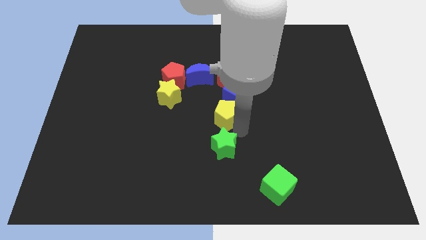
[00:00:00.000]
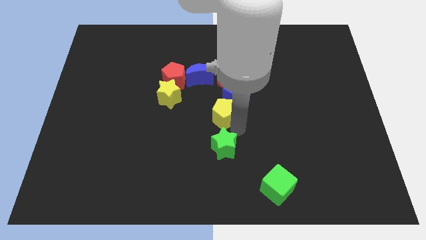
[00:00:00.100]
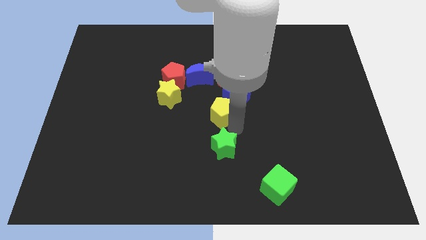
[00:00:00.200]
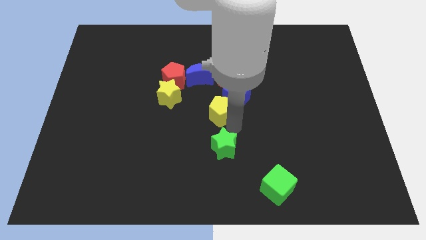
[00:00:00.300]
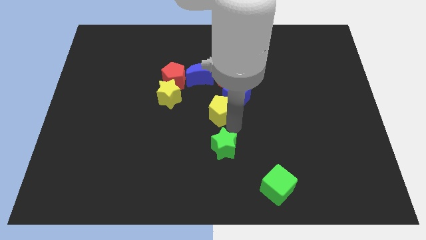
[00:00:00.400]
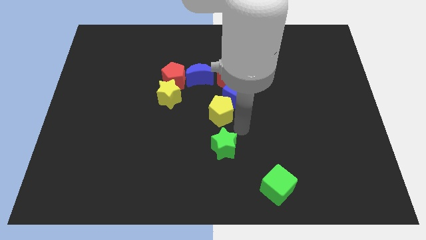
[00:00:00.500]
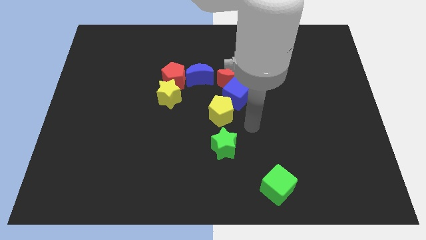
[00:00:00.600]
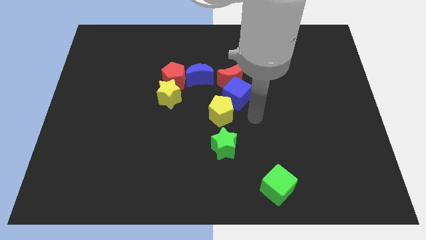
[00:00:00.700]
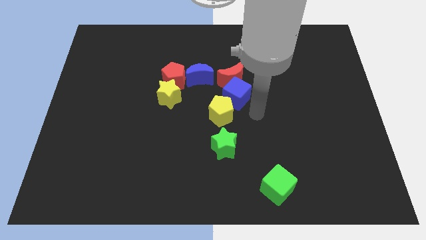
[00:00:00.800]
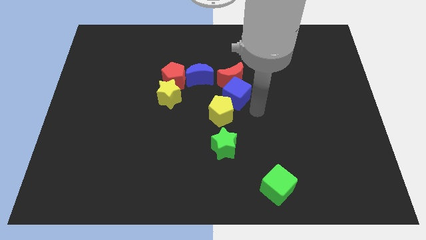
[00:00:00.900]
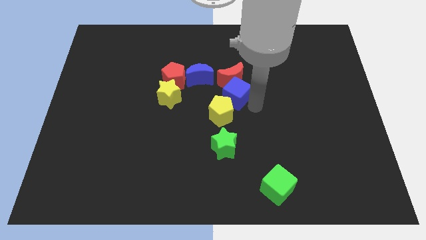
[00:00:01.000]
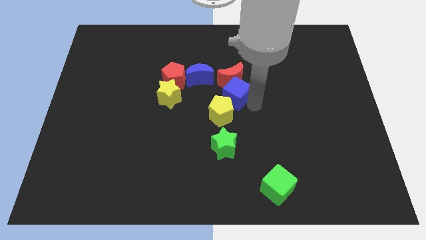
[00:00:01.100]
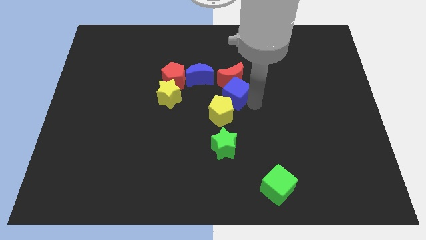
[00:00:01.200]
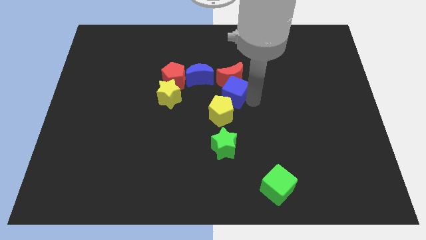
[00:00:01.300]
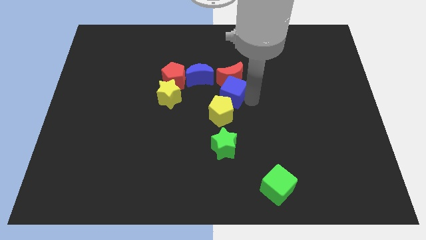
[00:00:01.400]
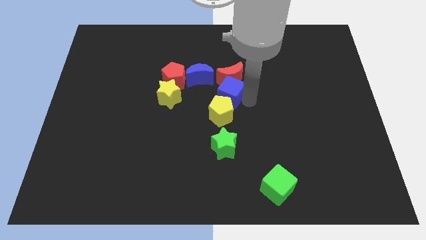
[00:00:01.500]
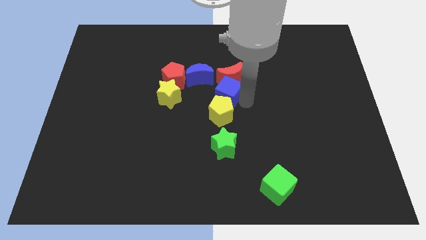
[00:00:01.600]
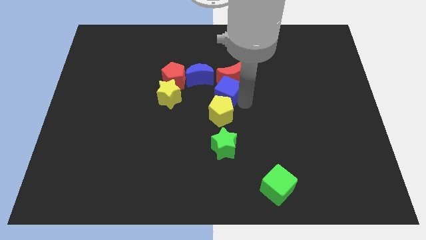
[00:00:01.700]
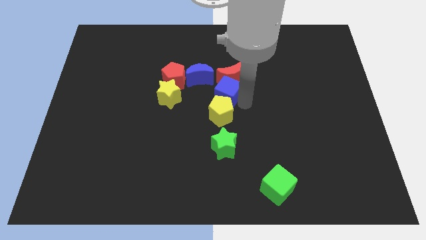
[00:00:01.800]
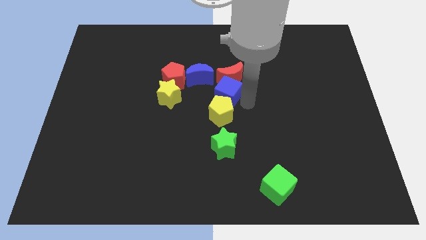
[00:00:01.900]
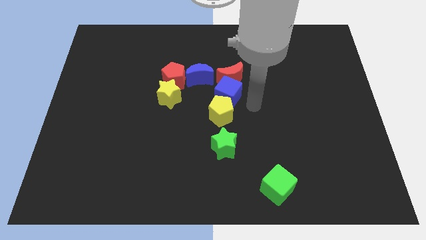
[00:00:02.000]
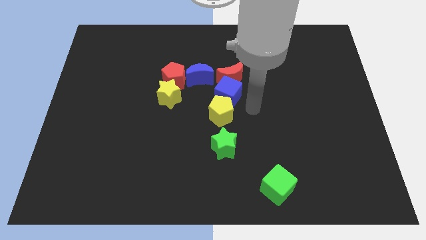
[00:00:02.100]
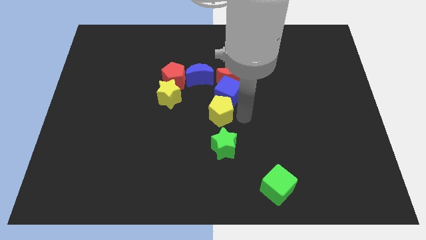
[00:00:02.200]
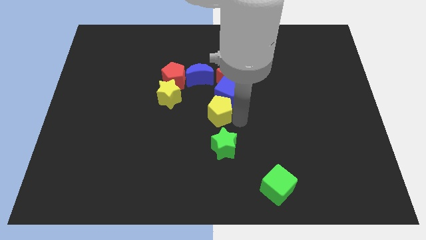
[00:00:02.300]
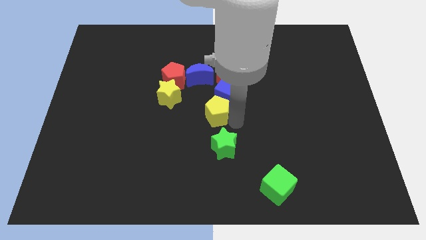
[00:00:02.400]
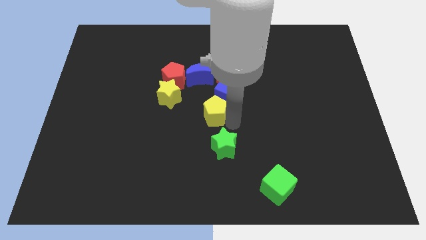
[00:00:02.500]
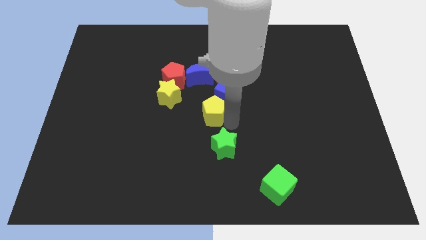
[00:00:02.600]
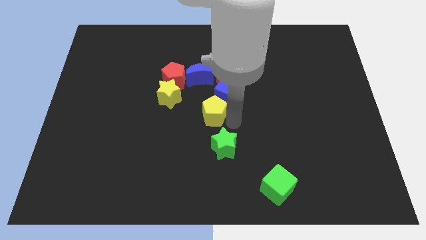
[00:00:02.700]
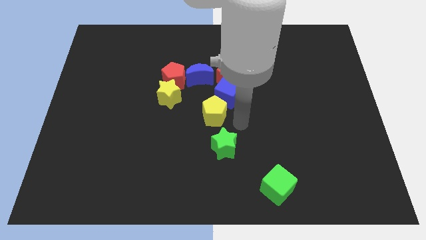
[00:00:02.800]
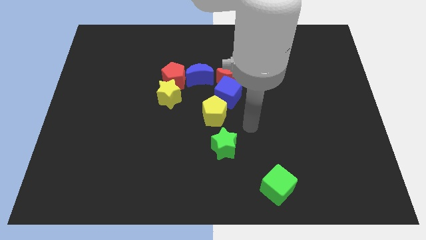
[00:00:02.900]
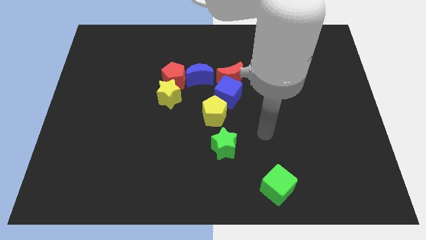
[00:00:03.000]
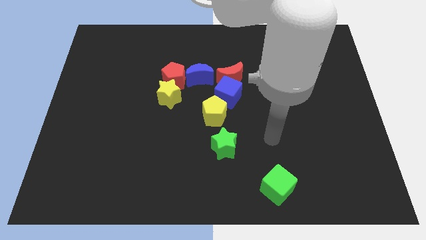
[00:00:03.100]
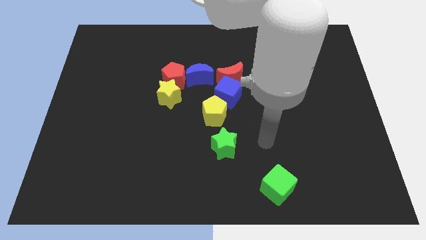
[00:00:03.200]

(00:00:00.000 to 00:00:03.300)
slightly move the yellow pentagon to the centre of the board

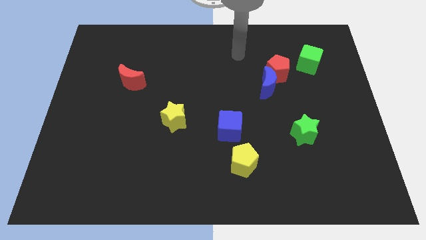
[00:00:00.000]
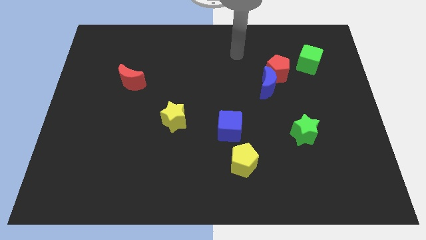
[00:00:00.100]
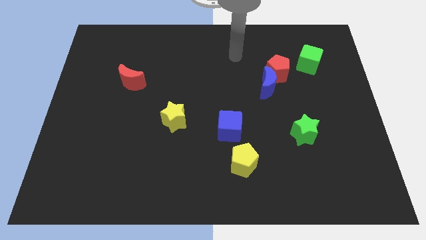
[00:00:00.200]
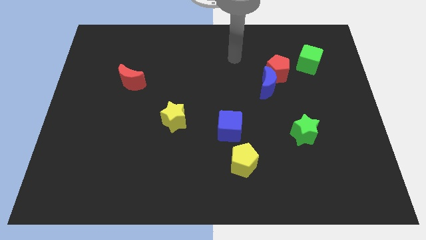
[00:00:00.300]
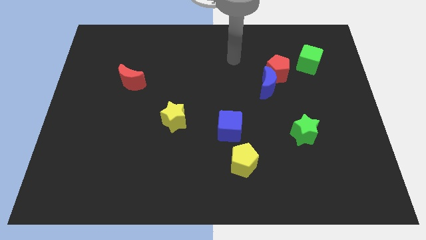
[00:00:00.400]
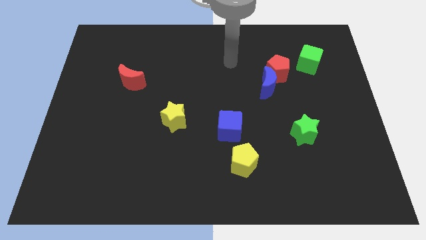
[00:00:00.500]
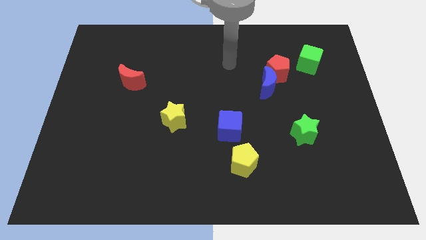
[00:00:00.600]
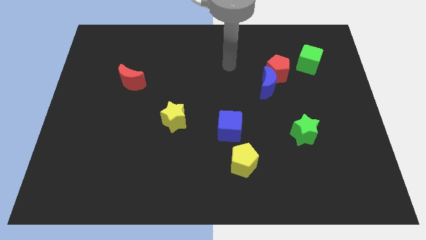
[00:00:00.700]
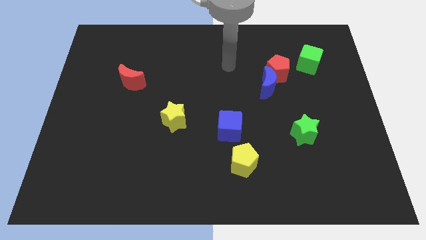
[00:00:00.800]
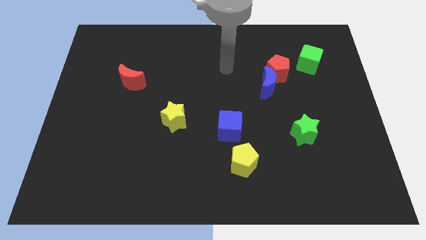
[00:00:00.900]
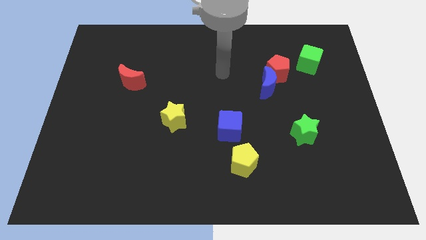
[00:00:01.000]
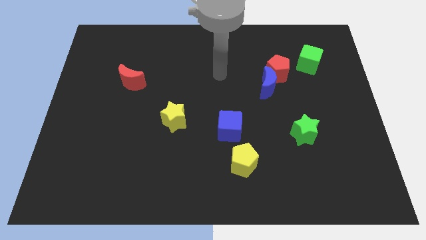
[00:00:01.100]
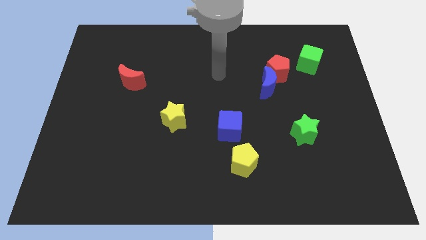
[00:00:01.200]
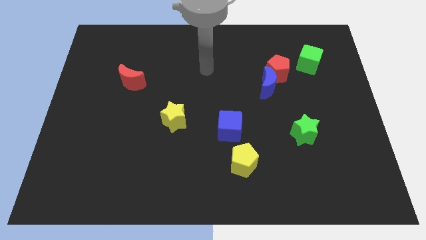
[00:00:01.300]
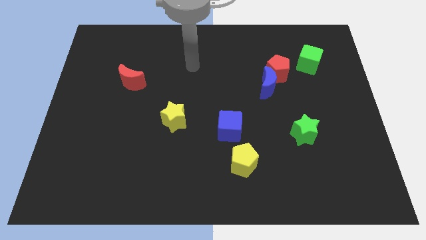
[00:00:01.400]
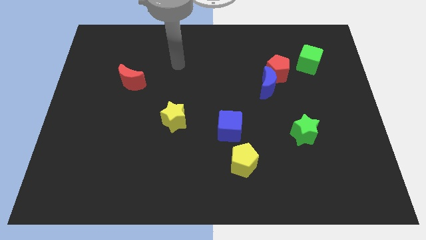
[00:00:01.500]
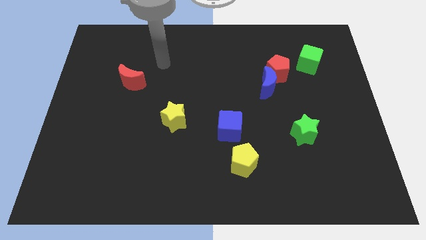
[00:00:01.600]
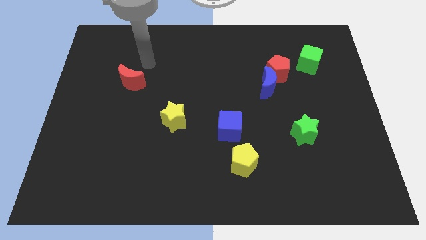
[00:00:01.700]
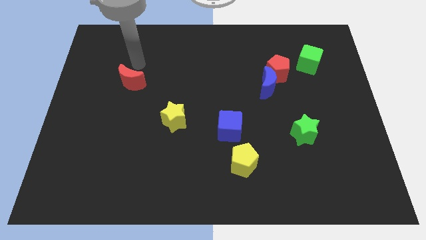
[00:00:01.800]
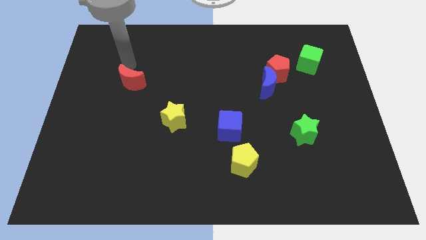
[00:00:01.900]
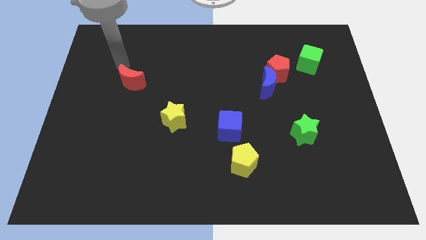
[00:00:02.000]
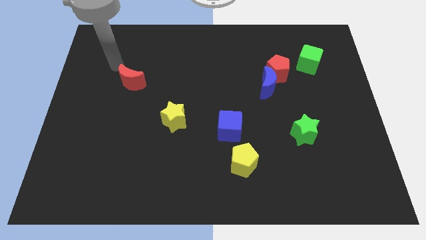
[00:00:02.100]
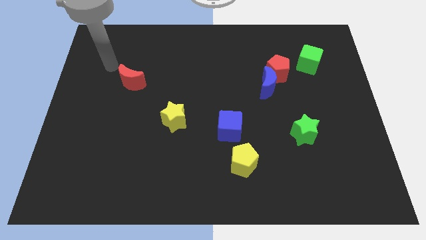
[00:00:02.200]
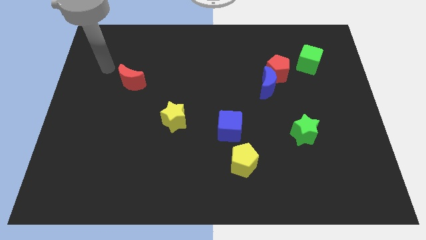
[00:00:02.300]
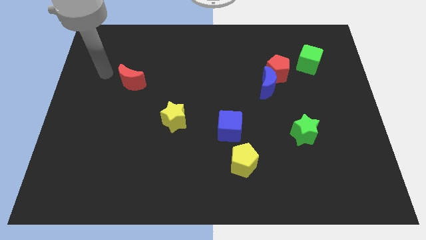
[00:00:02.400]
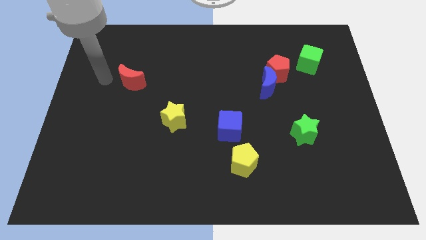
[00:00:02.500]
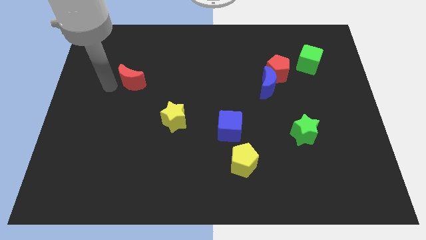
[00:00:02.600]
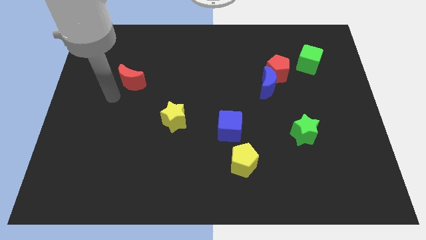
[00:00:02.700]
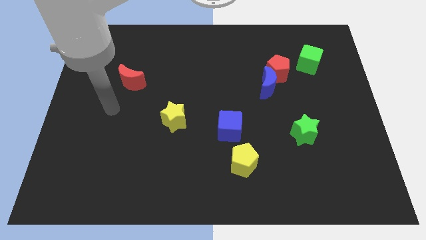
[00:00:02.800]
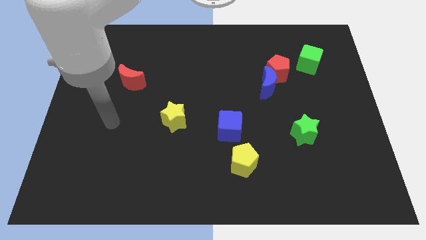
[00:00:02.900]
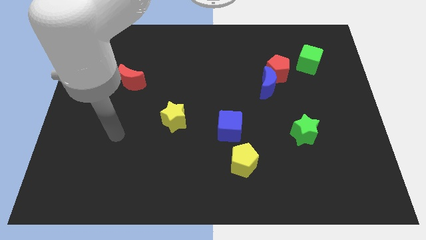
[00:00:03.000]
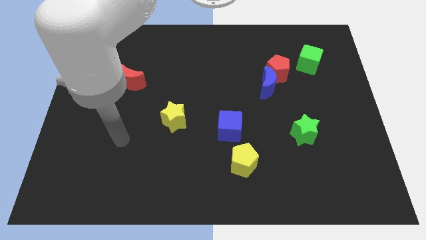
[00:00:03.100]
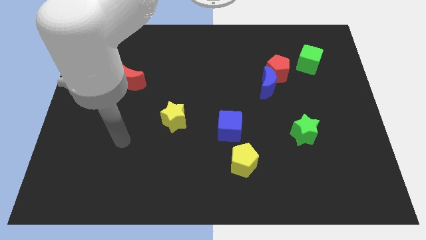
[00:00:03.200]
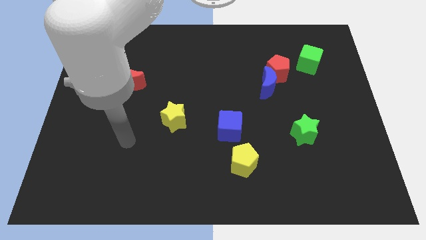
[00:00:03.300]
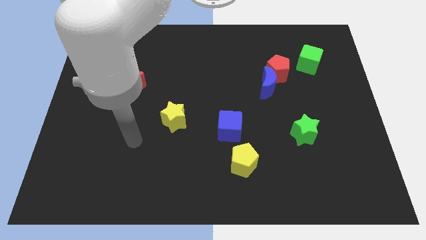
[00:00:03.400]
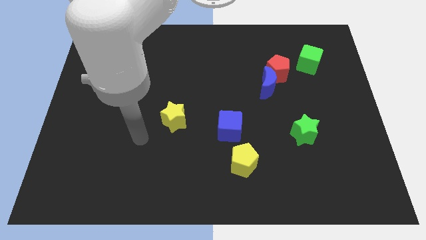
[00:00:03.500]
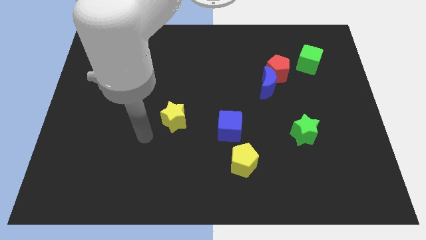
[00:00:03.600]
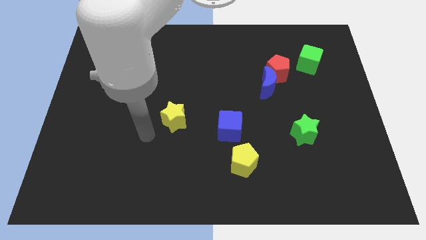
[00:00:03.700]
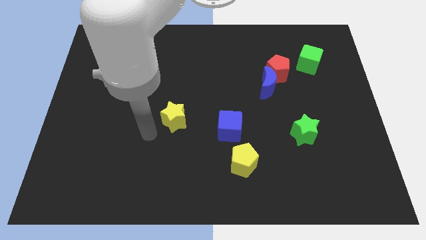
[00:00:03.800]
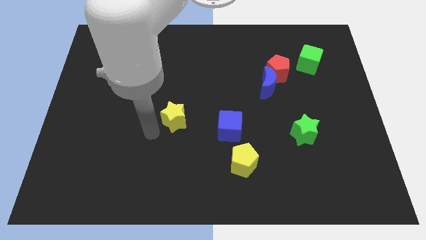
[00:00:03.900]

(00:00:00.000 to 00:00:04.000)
place your arm left to yellow star

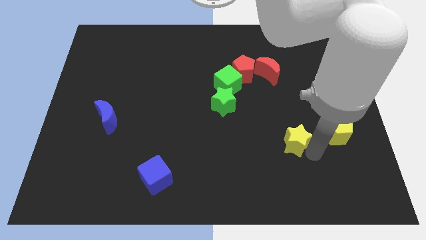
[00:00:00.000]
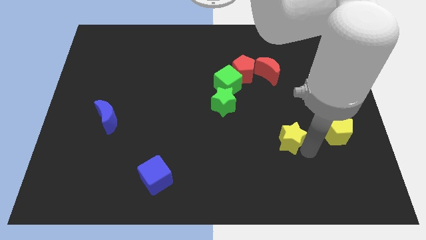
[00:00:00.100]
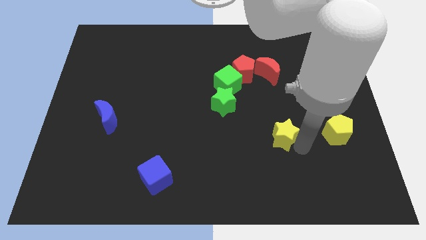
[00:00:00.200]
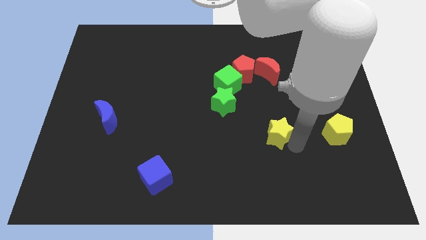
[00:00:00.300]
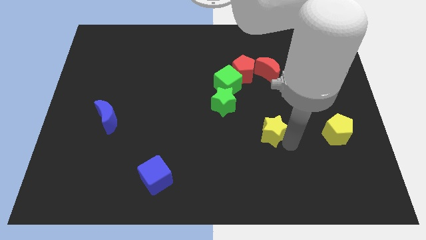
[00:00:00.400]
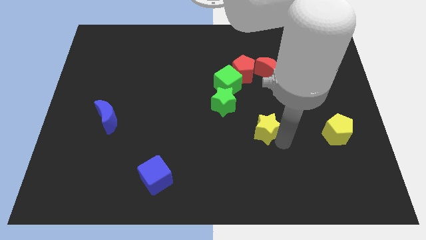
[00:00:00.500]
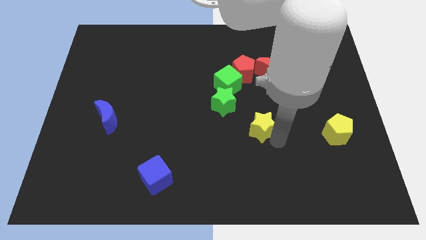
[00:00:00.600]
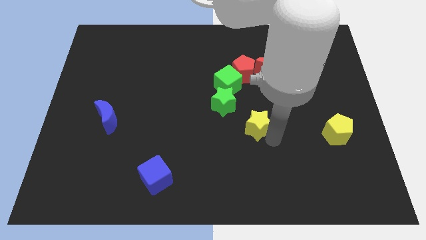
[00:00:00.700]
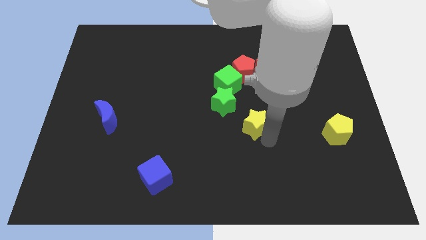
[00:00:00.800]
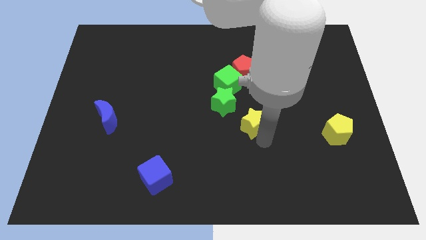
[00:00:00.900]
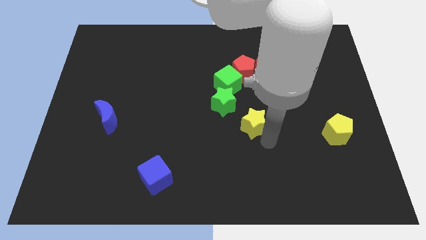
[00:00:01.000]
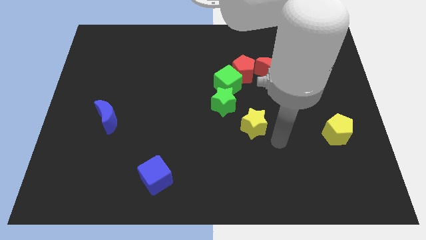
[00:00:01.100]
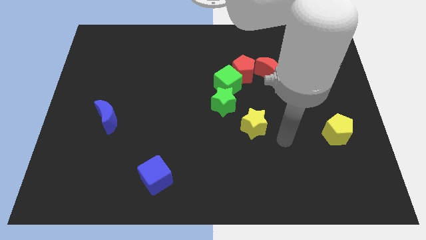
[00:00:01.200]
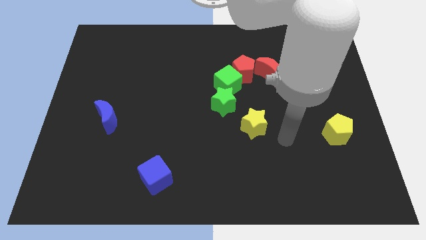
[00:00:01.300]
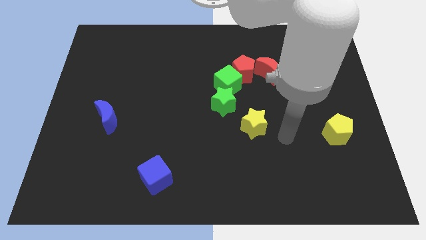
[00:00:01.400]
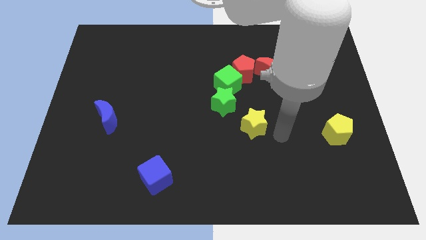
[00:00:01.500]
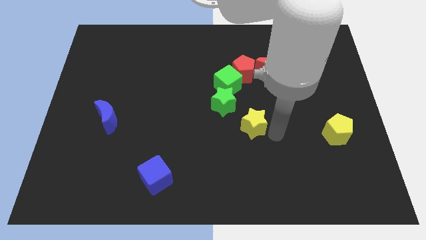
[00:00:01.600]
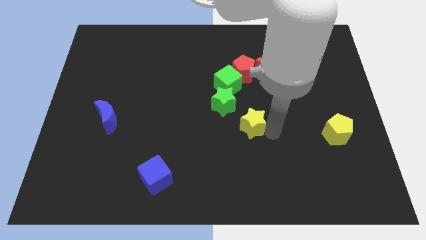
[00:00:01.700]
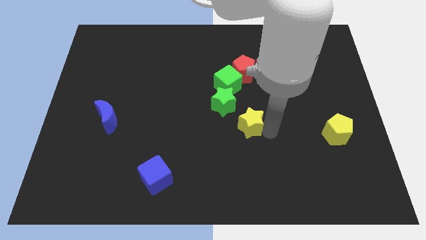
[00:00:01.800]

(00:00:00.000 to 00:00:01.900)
push the yellow star to the right side of the green star
